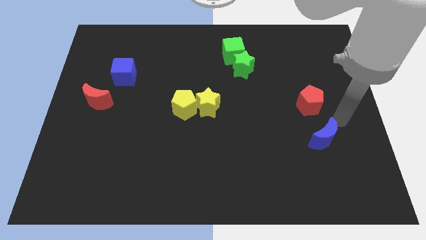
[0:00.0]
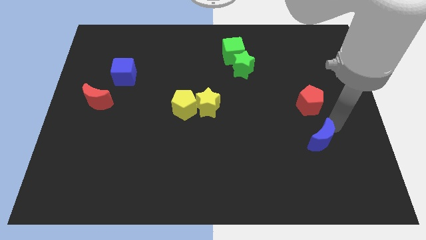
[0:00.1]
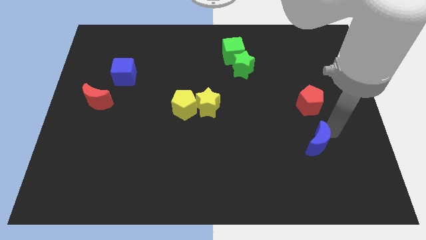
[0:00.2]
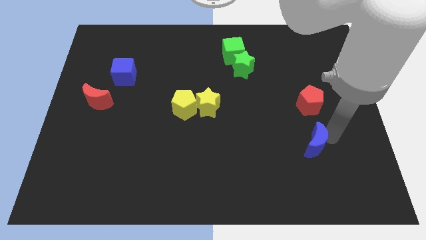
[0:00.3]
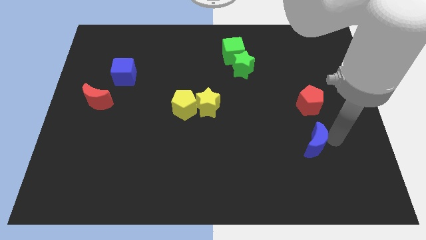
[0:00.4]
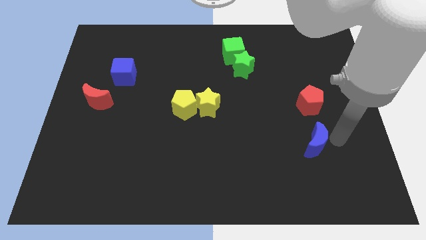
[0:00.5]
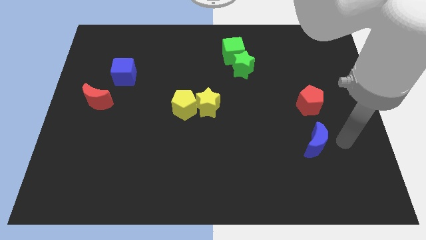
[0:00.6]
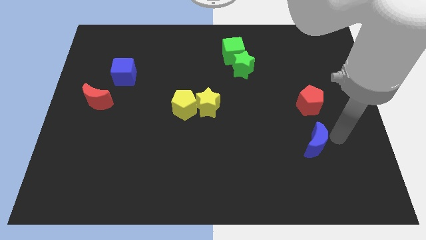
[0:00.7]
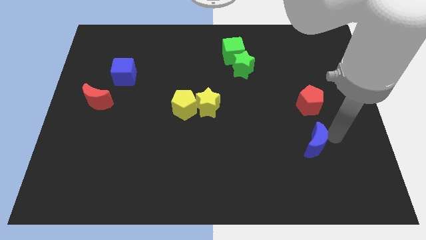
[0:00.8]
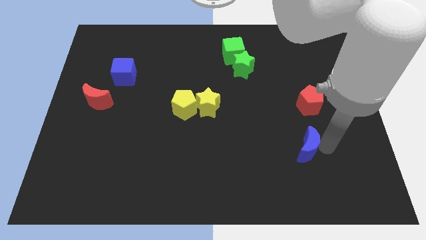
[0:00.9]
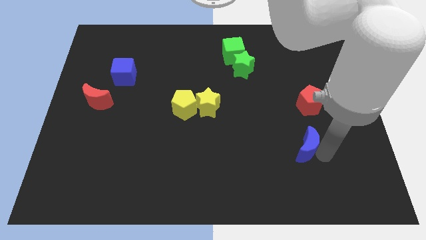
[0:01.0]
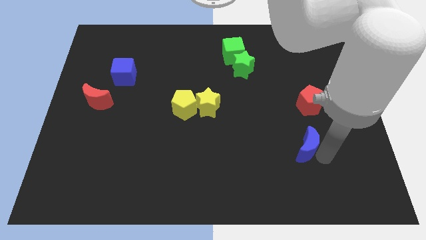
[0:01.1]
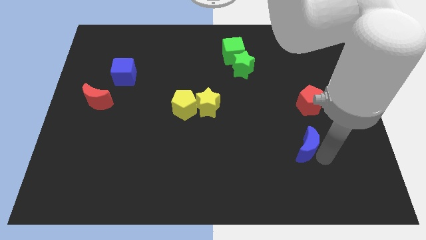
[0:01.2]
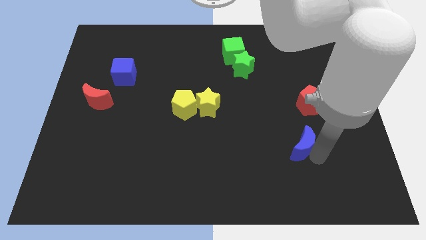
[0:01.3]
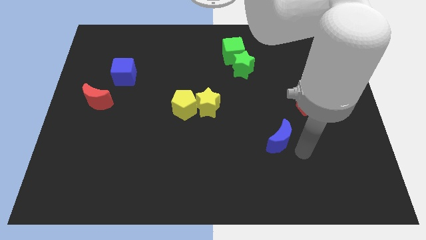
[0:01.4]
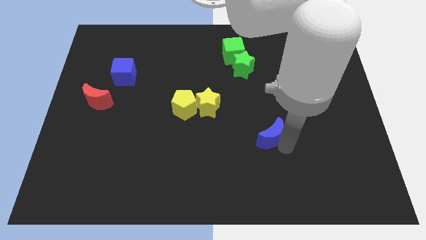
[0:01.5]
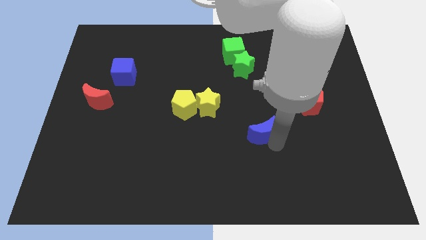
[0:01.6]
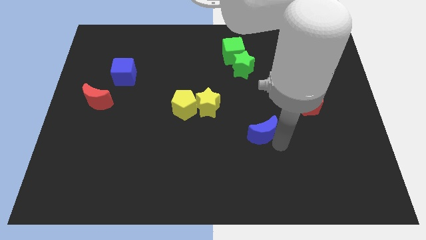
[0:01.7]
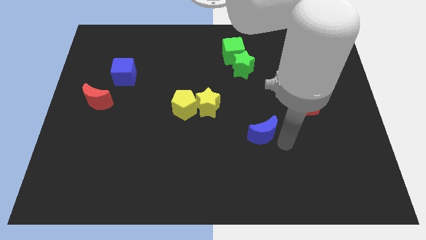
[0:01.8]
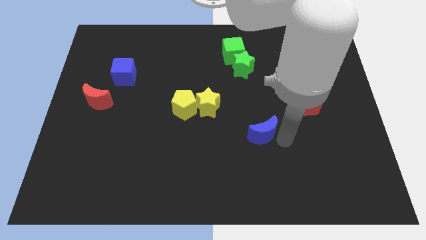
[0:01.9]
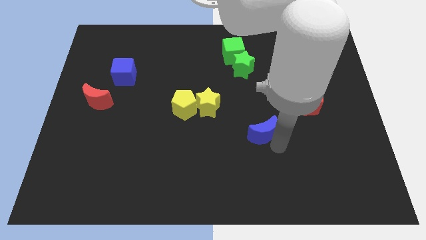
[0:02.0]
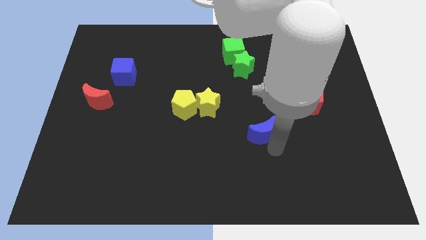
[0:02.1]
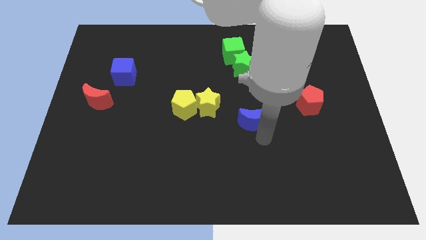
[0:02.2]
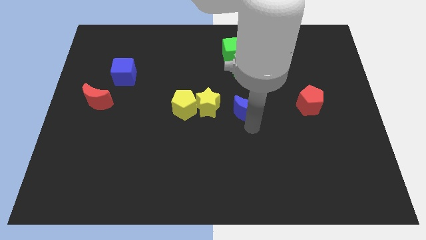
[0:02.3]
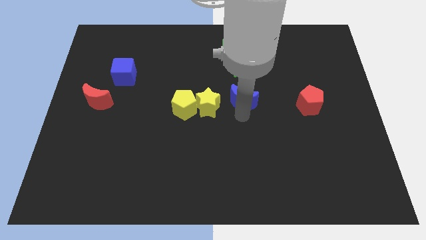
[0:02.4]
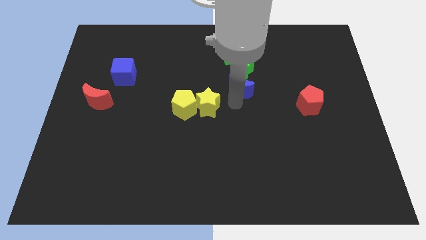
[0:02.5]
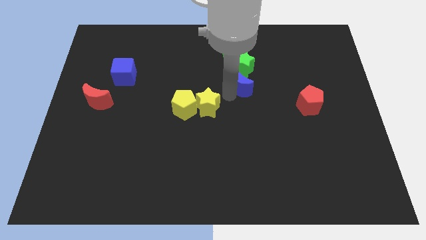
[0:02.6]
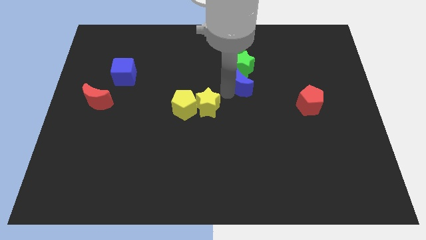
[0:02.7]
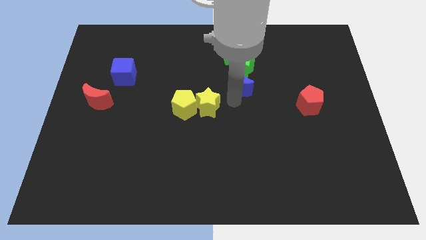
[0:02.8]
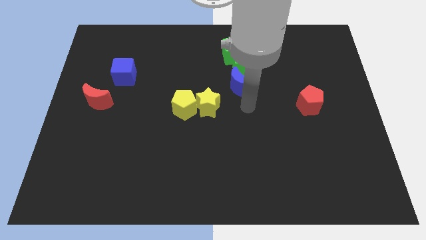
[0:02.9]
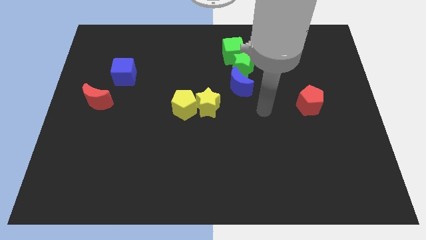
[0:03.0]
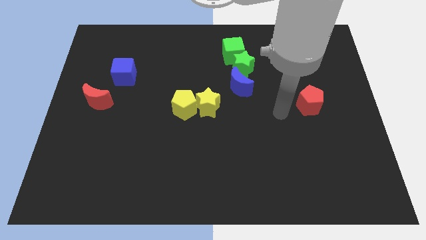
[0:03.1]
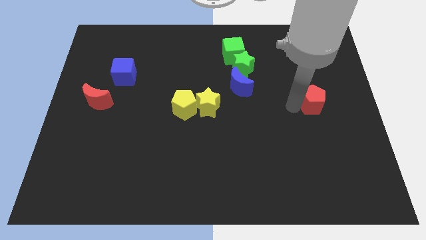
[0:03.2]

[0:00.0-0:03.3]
push the blue crescent to the bottom of the green star

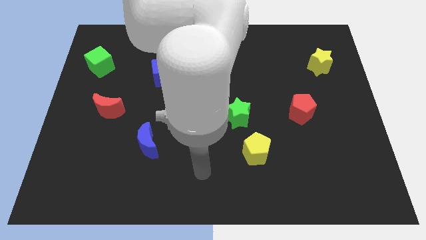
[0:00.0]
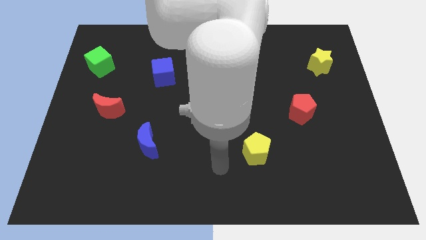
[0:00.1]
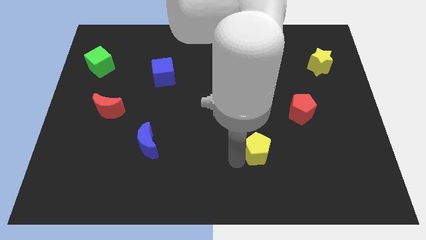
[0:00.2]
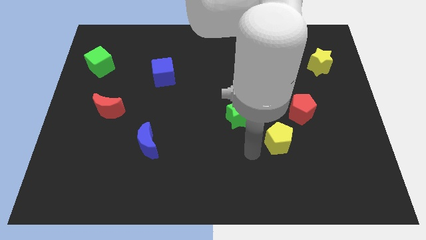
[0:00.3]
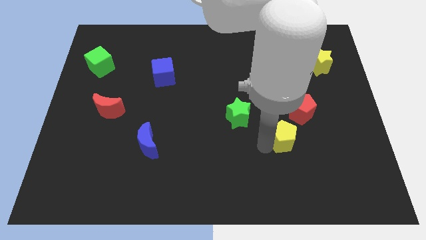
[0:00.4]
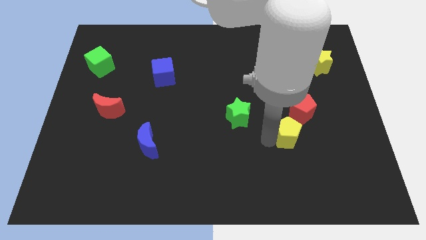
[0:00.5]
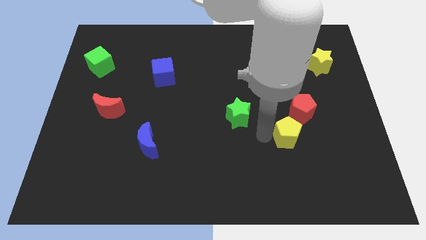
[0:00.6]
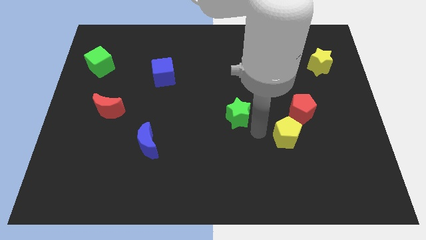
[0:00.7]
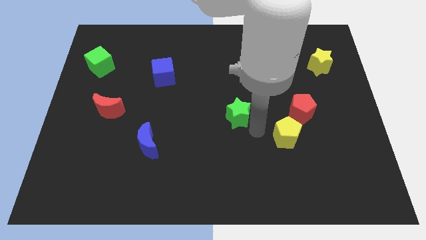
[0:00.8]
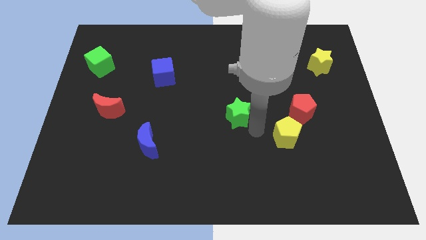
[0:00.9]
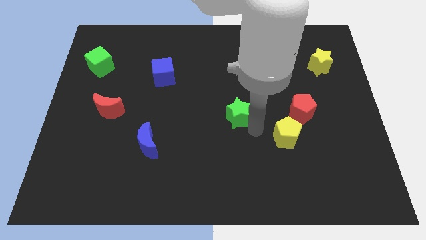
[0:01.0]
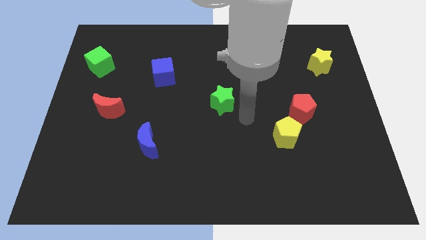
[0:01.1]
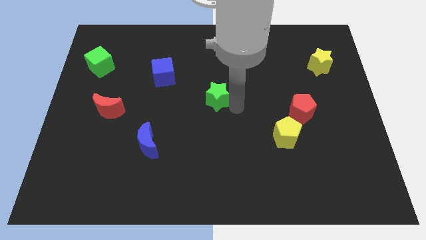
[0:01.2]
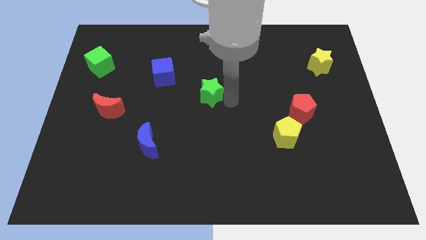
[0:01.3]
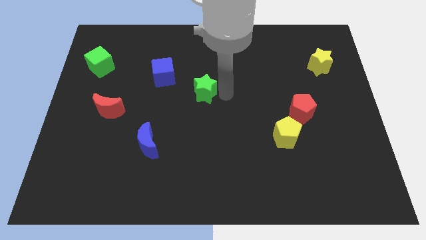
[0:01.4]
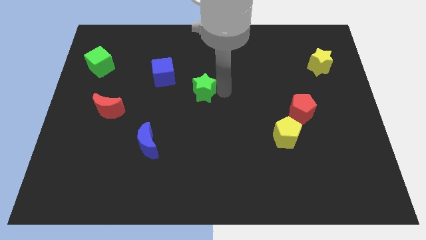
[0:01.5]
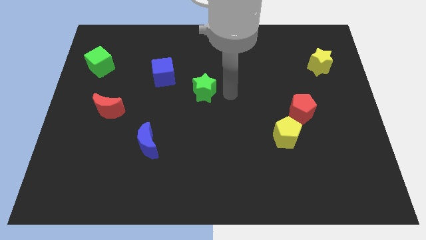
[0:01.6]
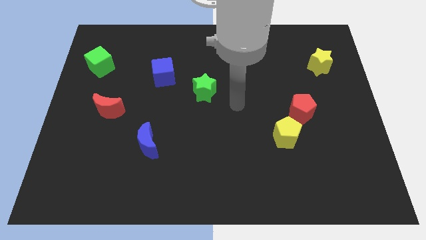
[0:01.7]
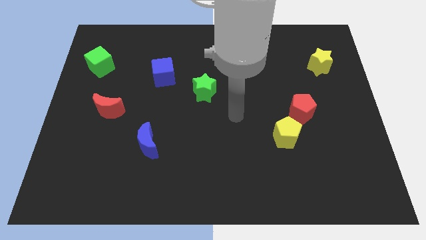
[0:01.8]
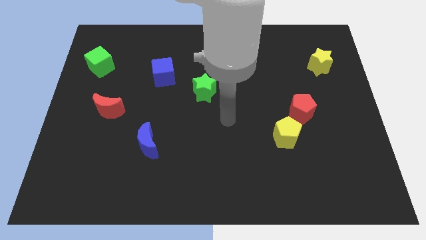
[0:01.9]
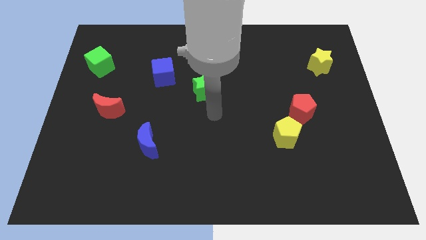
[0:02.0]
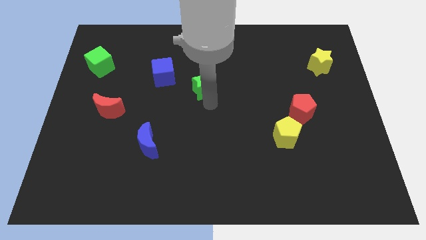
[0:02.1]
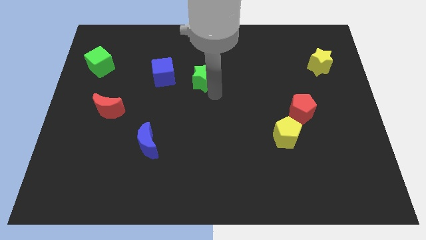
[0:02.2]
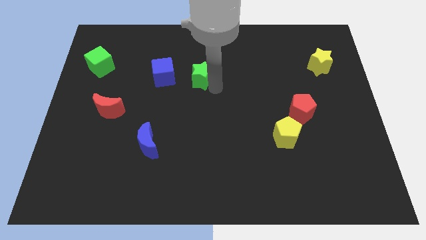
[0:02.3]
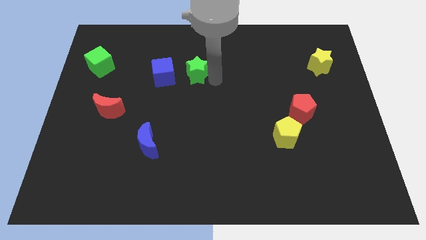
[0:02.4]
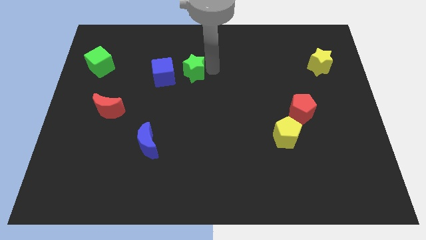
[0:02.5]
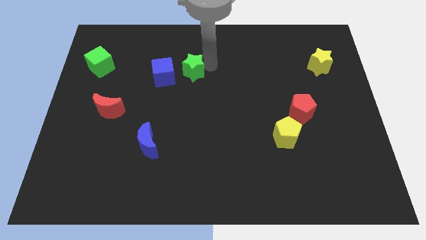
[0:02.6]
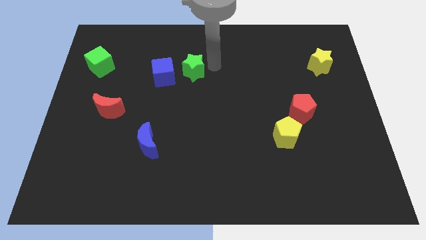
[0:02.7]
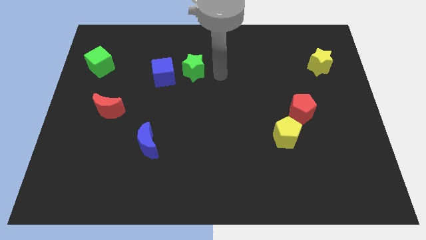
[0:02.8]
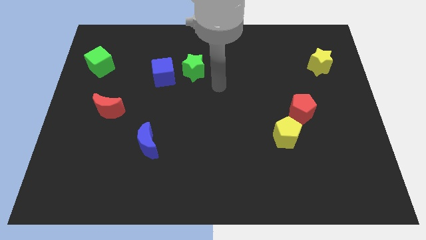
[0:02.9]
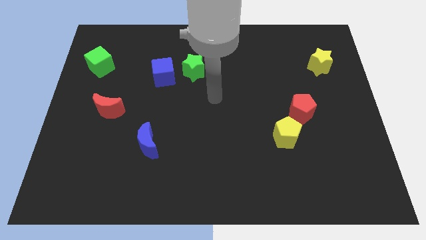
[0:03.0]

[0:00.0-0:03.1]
move the yellow pentagon towards right and green star towards the blue cube

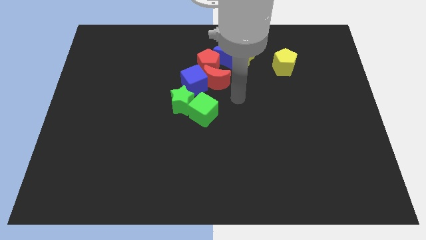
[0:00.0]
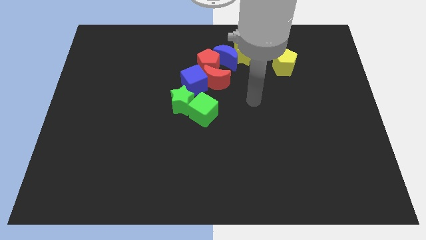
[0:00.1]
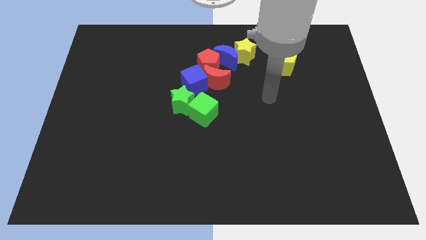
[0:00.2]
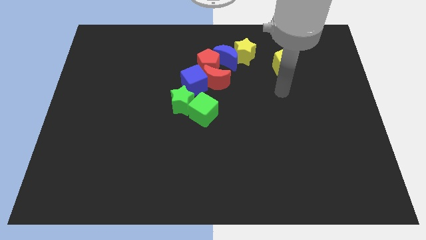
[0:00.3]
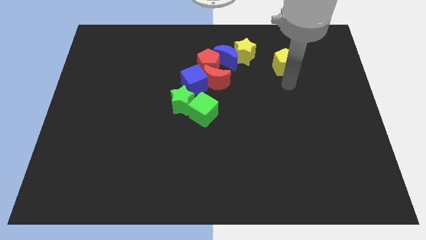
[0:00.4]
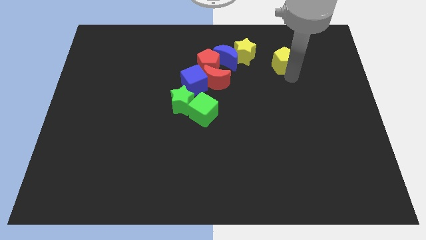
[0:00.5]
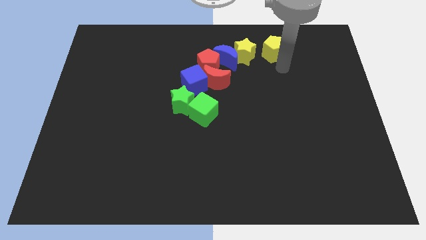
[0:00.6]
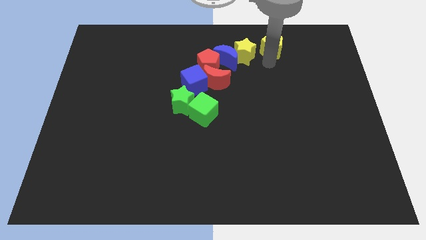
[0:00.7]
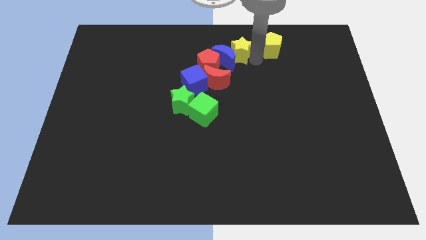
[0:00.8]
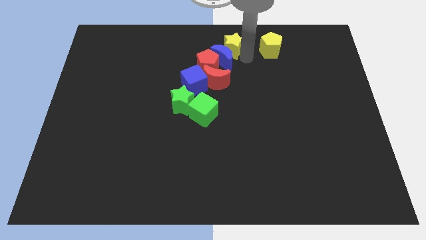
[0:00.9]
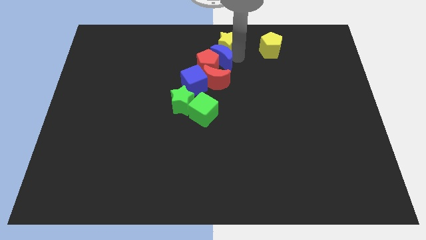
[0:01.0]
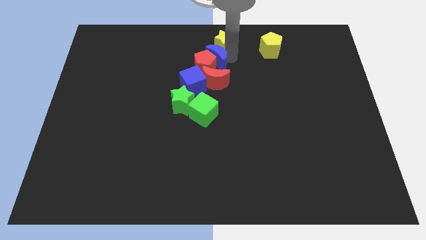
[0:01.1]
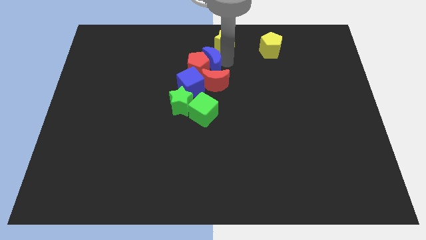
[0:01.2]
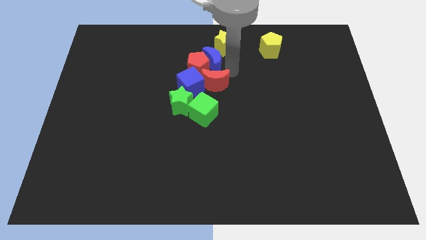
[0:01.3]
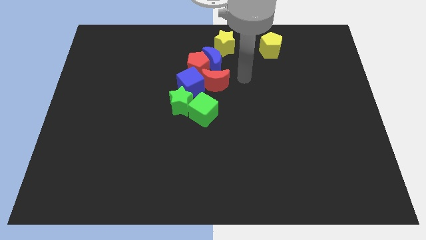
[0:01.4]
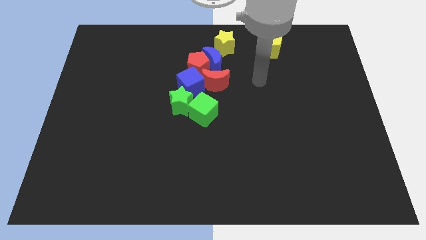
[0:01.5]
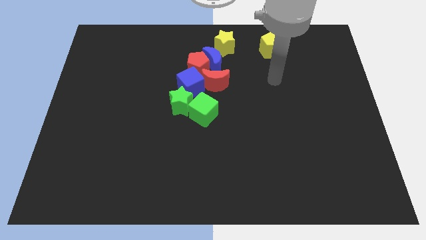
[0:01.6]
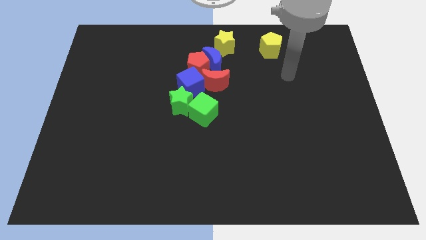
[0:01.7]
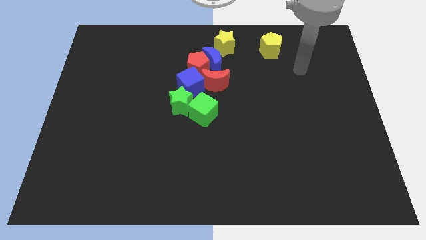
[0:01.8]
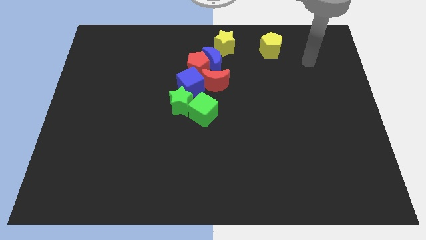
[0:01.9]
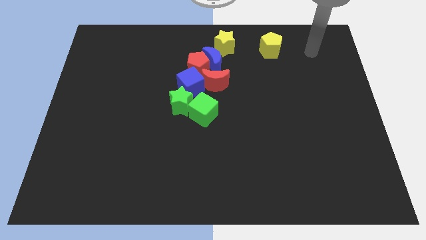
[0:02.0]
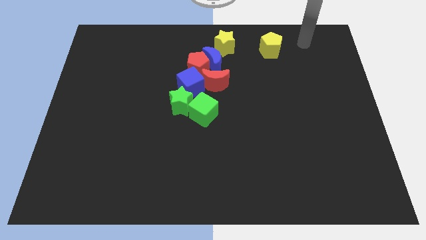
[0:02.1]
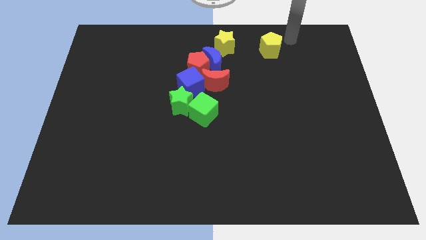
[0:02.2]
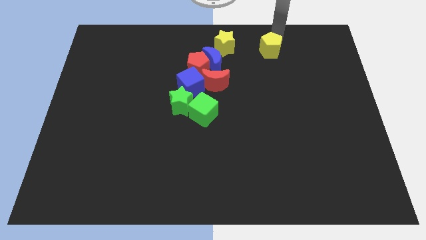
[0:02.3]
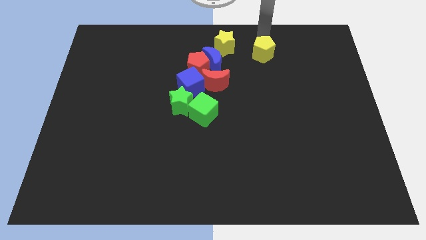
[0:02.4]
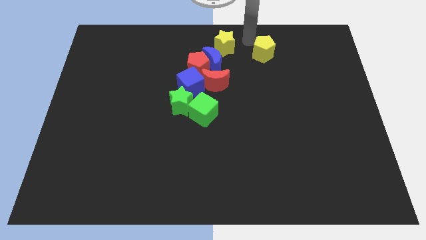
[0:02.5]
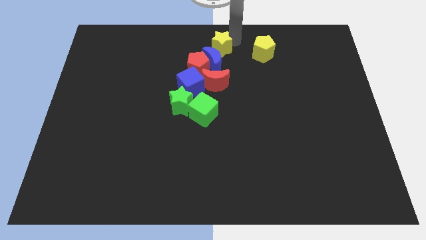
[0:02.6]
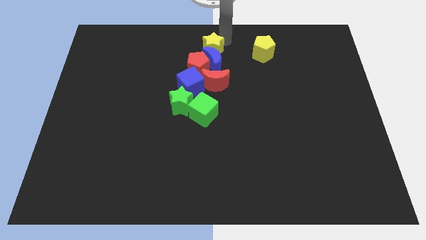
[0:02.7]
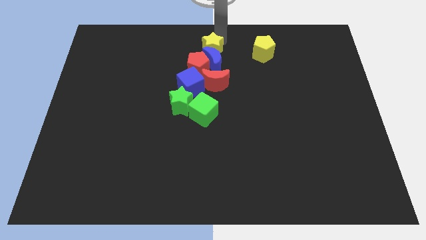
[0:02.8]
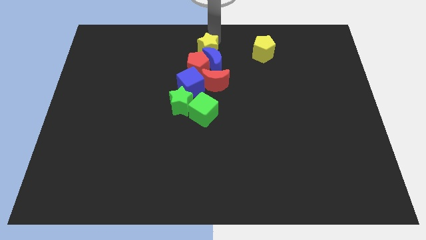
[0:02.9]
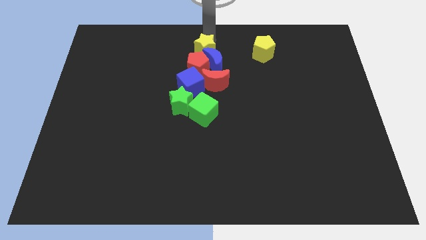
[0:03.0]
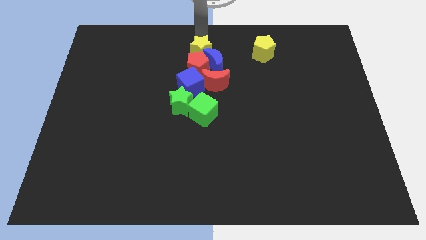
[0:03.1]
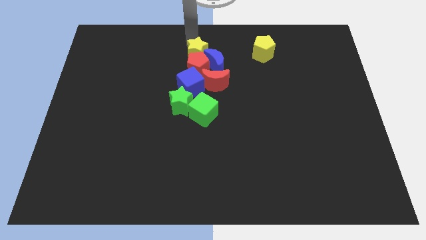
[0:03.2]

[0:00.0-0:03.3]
move yellow star to the top of the red pentagon
